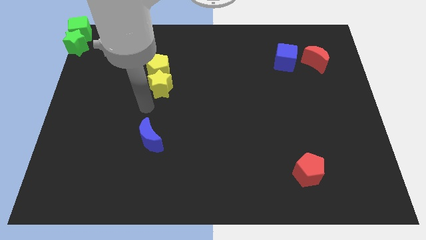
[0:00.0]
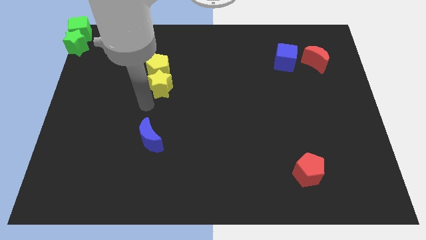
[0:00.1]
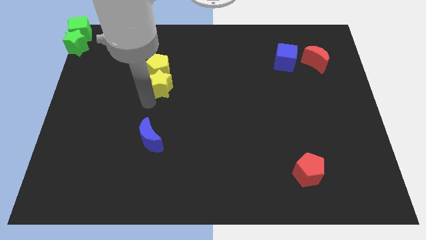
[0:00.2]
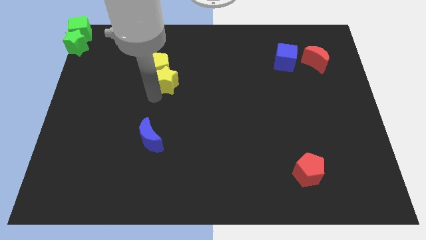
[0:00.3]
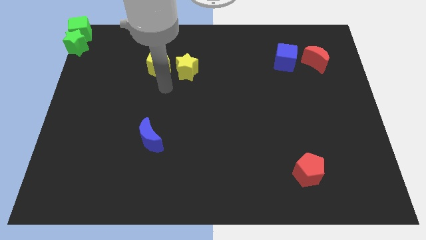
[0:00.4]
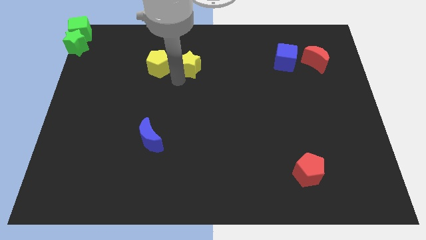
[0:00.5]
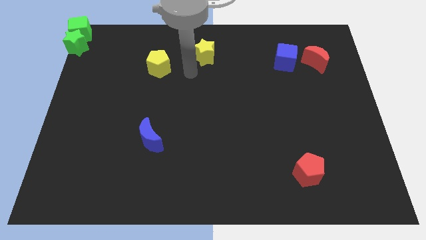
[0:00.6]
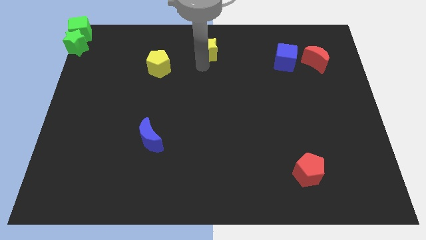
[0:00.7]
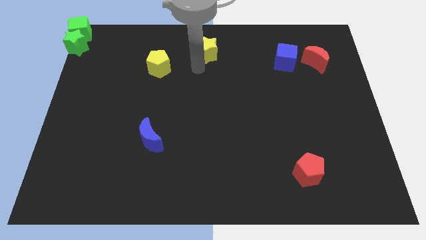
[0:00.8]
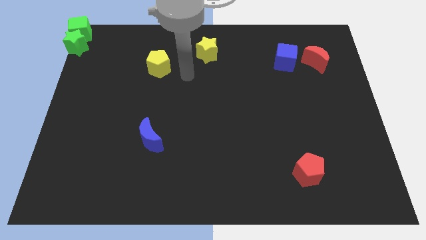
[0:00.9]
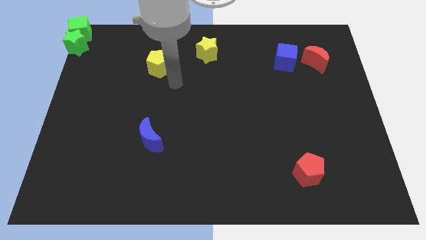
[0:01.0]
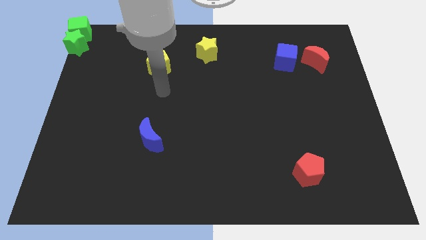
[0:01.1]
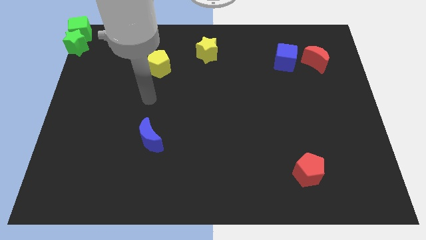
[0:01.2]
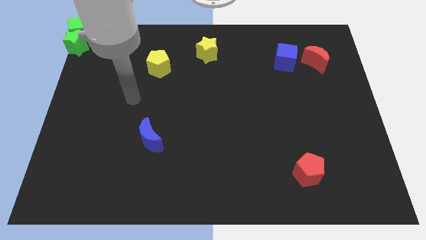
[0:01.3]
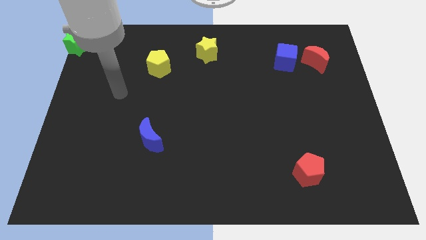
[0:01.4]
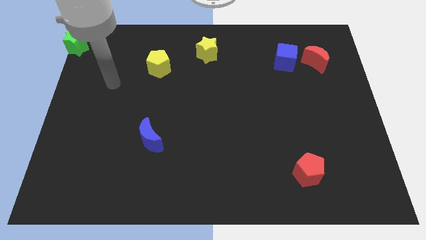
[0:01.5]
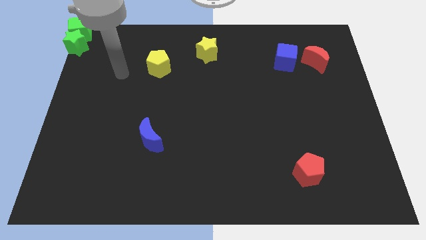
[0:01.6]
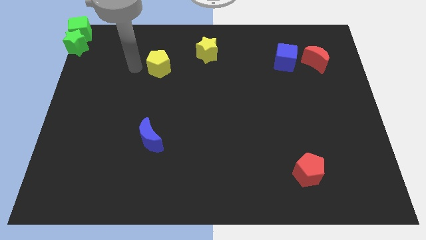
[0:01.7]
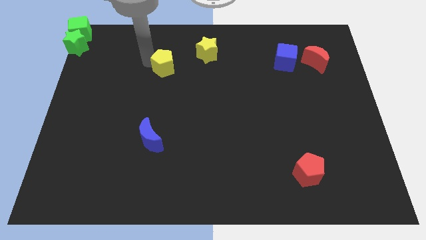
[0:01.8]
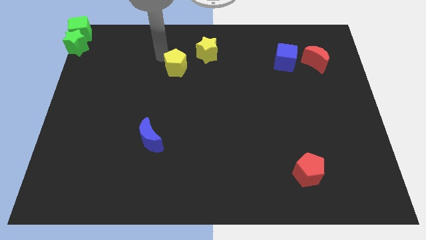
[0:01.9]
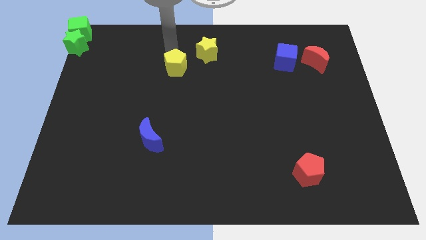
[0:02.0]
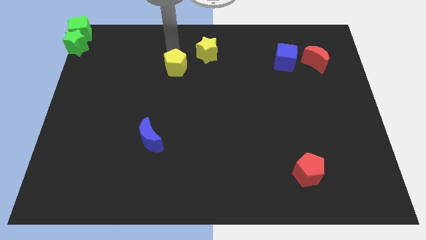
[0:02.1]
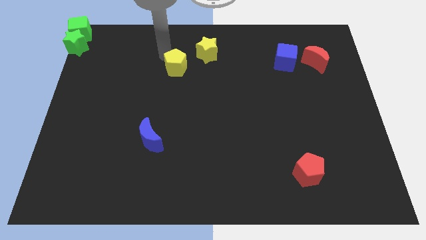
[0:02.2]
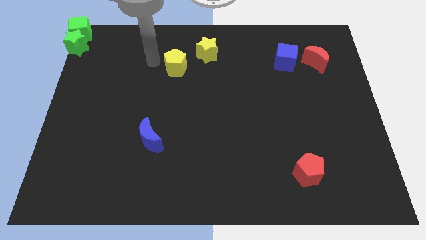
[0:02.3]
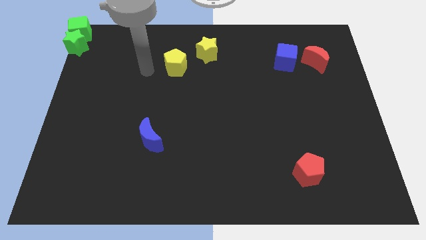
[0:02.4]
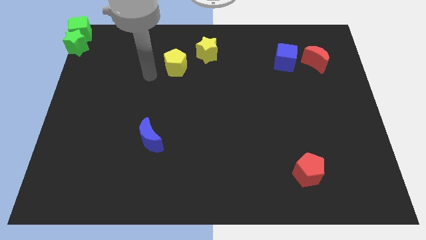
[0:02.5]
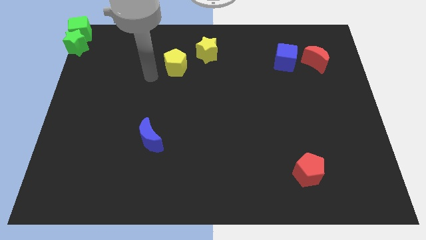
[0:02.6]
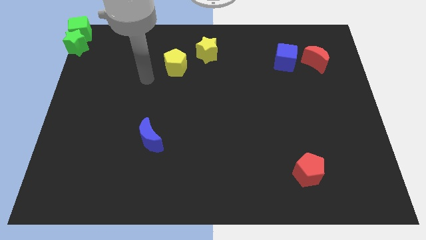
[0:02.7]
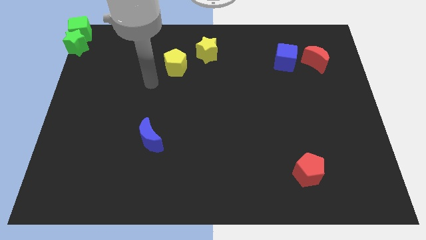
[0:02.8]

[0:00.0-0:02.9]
place the yellow star to the left of the blue cube

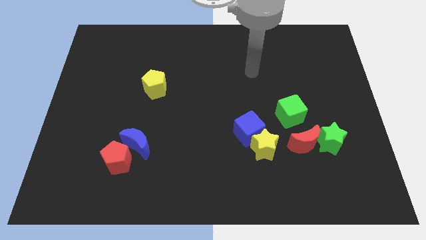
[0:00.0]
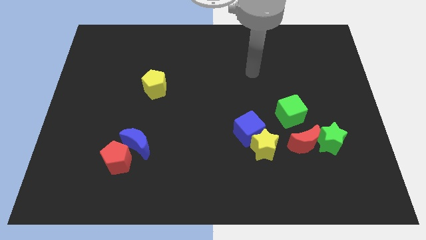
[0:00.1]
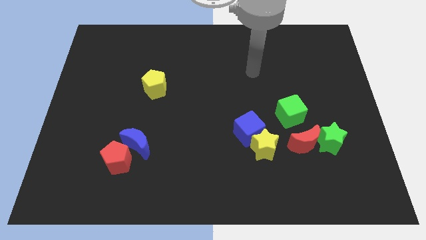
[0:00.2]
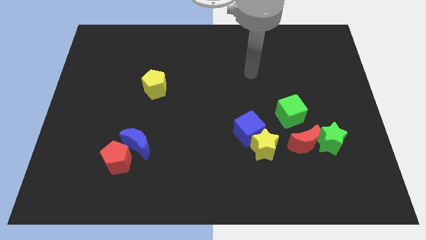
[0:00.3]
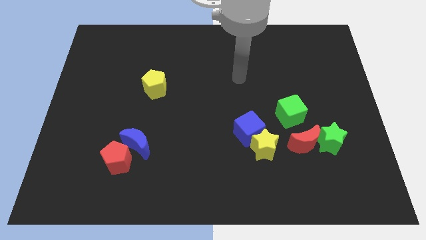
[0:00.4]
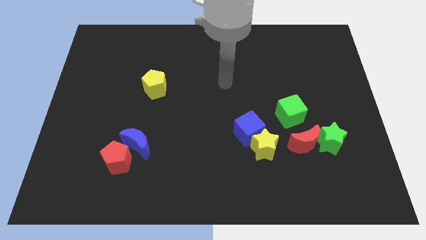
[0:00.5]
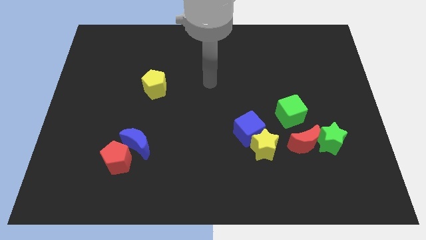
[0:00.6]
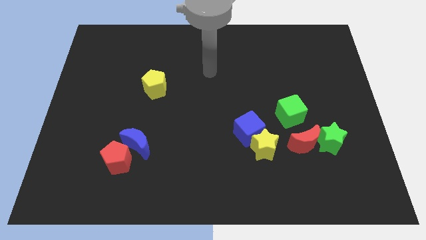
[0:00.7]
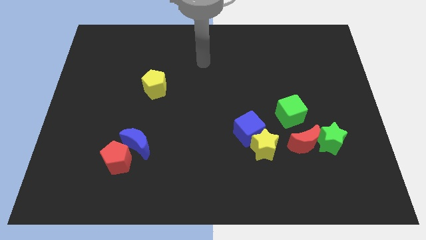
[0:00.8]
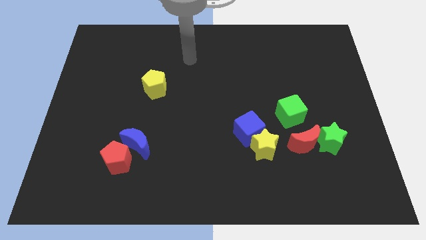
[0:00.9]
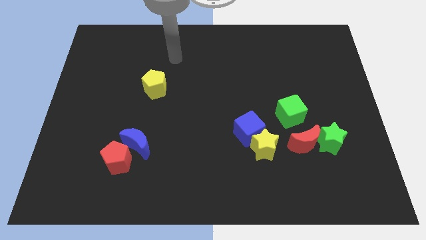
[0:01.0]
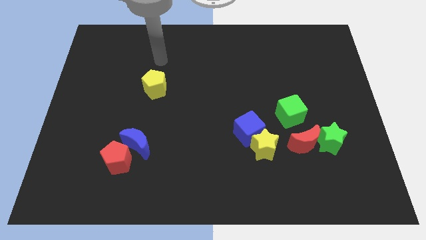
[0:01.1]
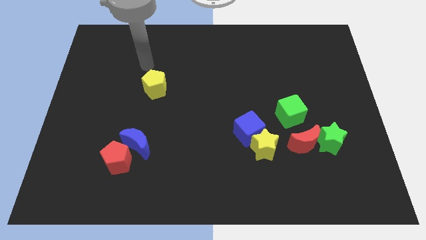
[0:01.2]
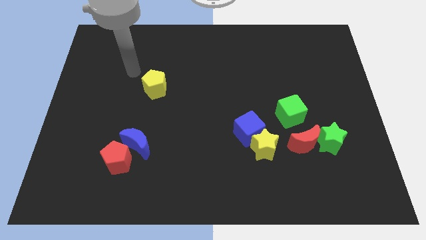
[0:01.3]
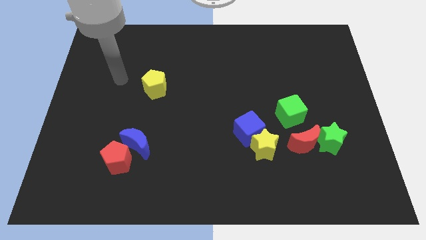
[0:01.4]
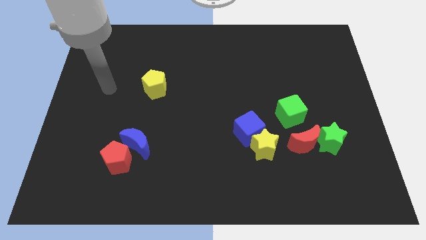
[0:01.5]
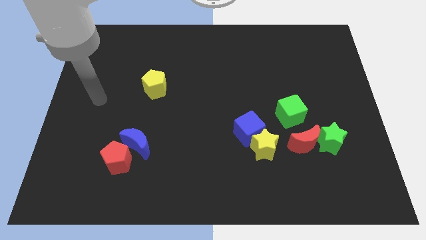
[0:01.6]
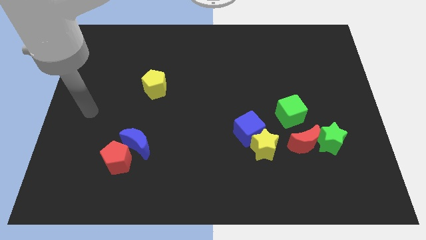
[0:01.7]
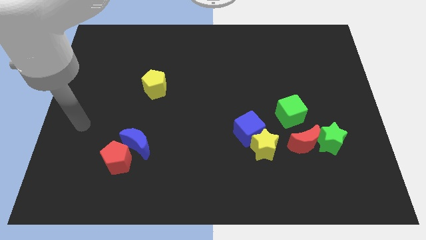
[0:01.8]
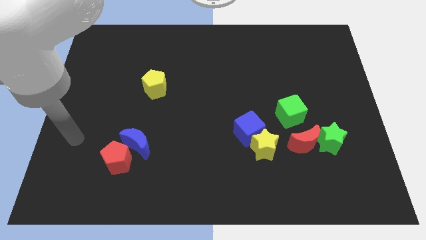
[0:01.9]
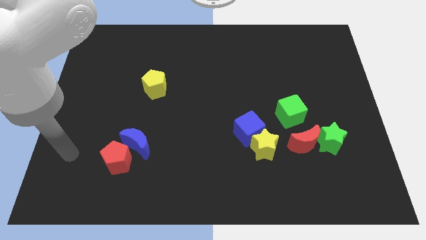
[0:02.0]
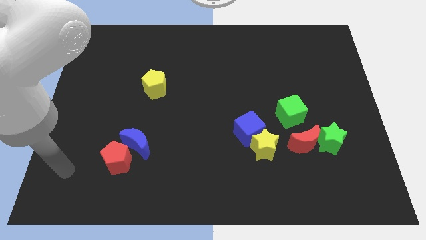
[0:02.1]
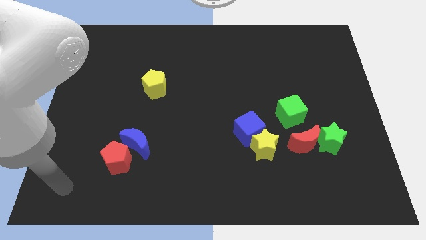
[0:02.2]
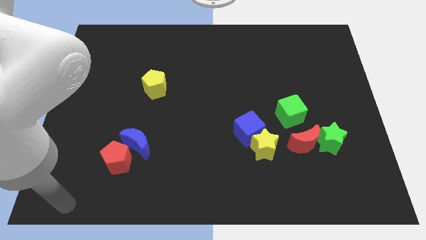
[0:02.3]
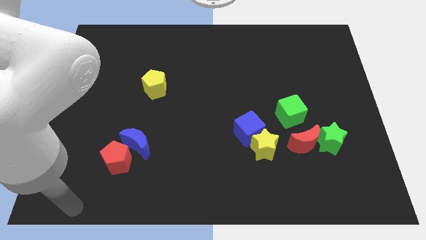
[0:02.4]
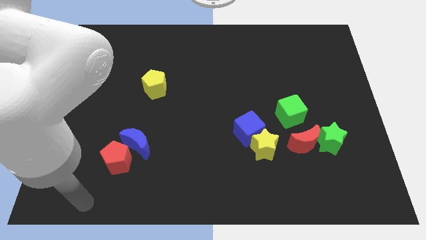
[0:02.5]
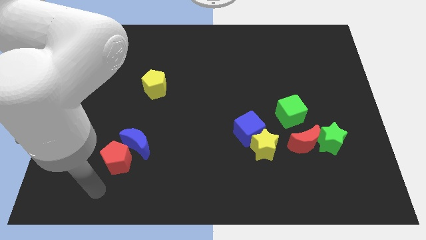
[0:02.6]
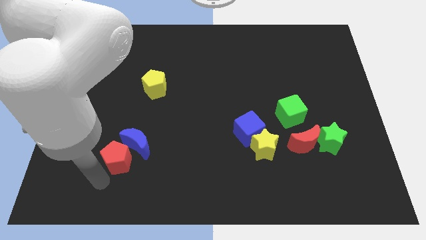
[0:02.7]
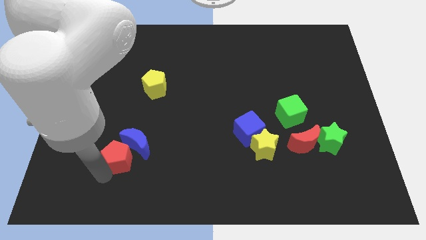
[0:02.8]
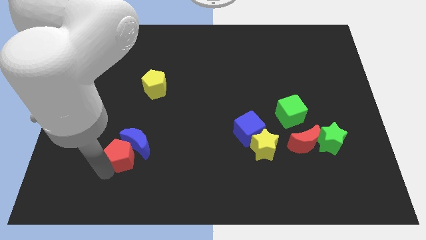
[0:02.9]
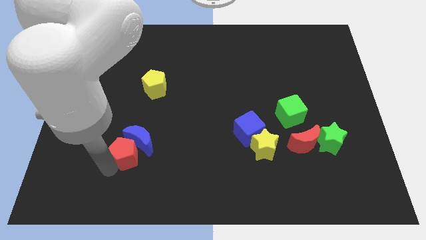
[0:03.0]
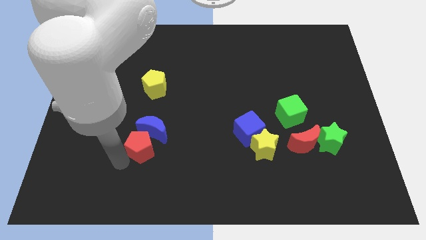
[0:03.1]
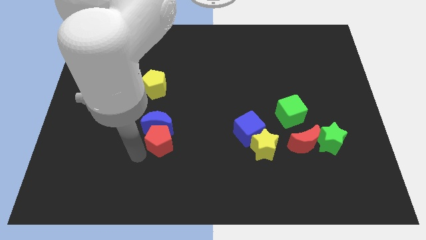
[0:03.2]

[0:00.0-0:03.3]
push the red pentagon into the blue moon

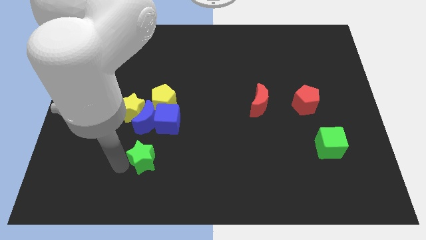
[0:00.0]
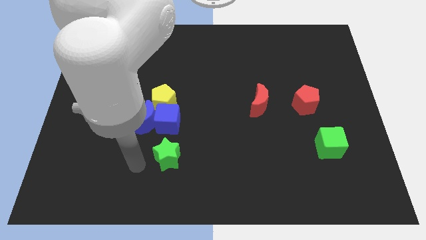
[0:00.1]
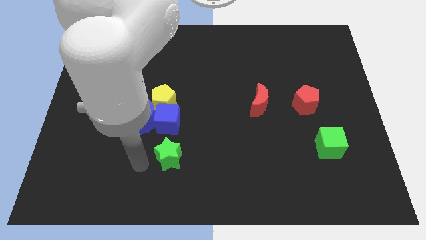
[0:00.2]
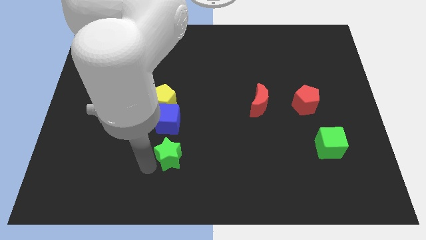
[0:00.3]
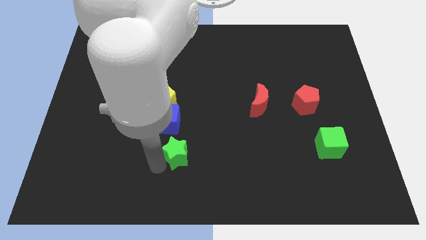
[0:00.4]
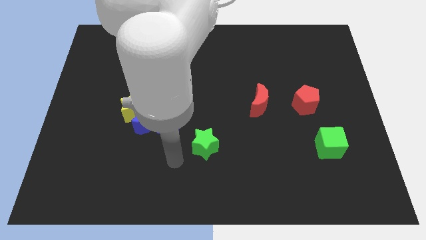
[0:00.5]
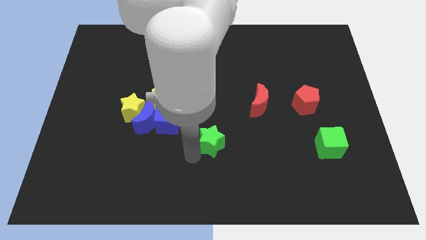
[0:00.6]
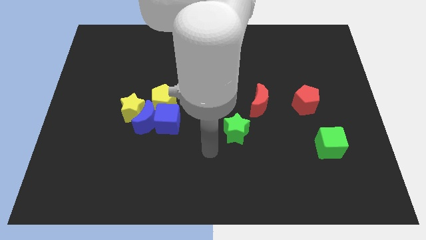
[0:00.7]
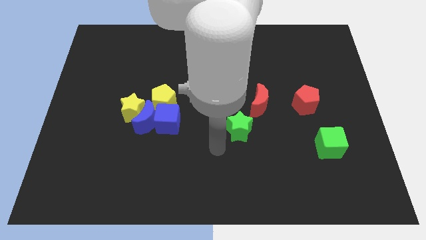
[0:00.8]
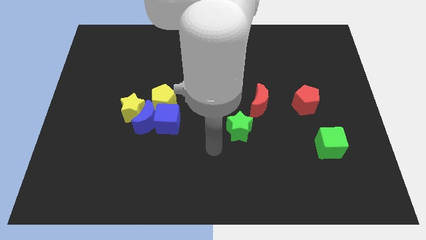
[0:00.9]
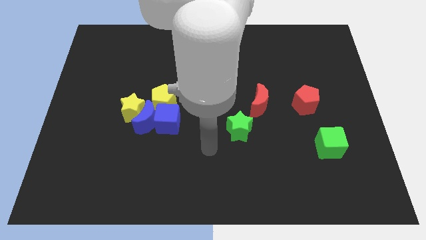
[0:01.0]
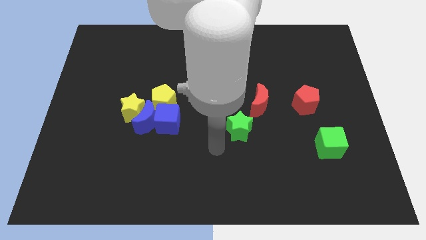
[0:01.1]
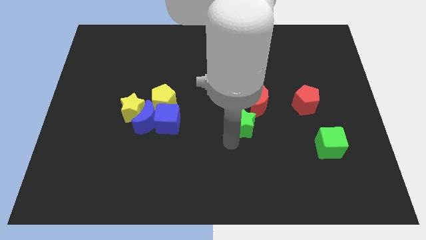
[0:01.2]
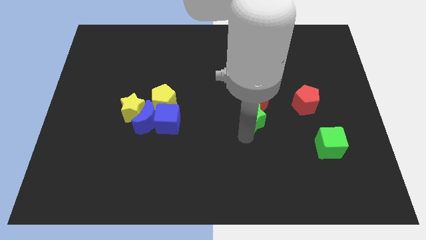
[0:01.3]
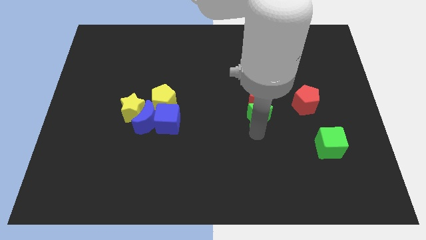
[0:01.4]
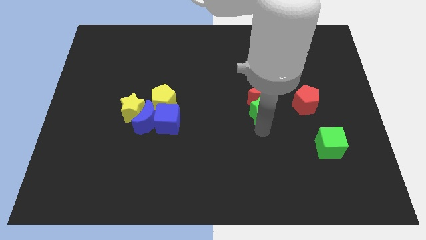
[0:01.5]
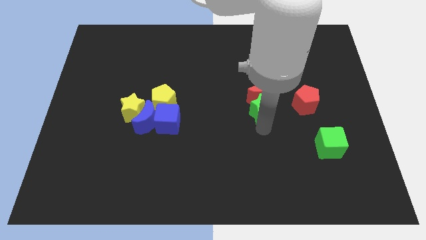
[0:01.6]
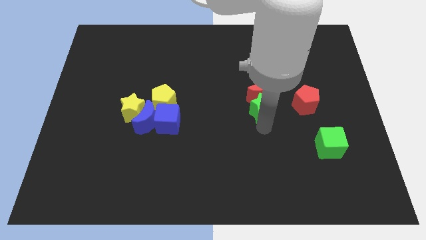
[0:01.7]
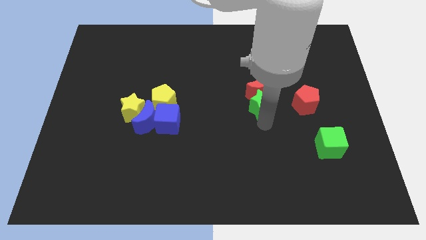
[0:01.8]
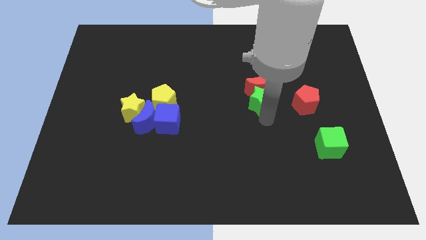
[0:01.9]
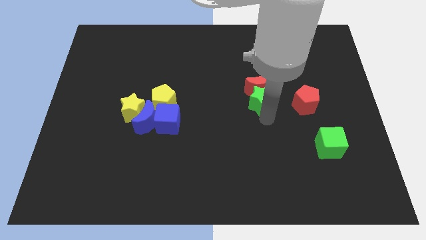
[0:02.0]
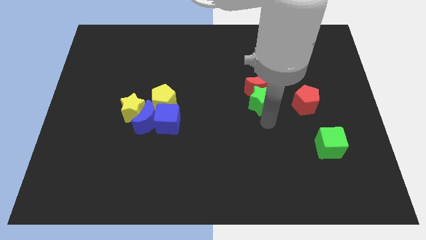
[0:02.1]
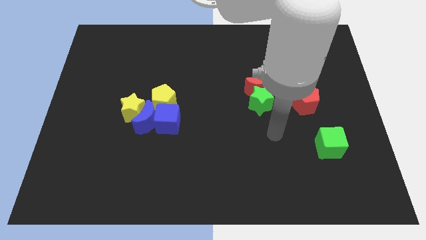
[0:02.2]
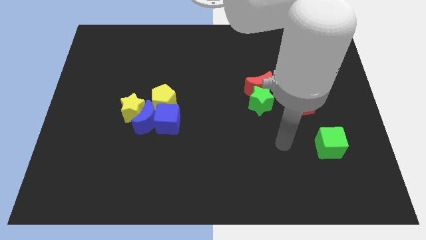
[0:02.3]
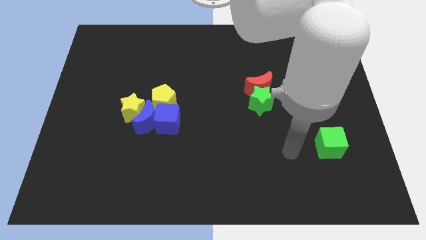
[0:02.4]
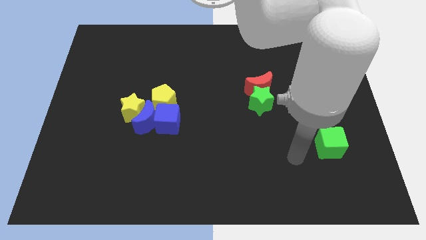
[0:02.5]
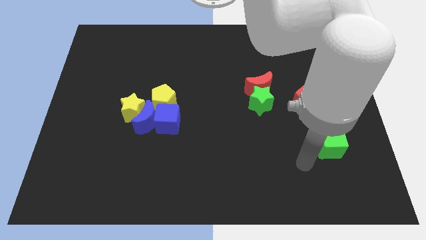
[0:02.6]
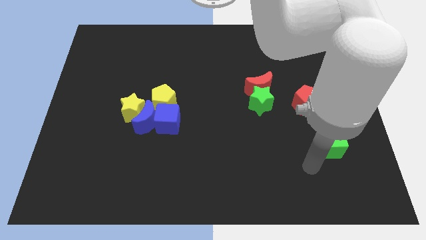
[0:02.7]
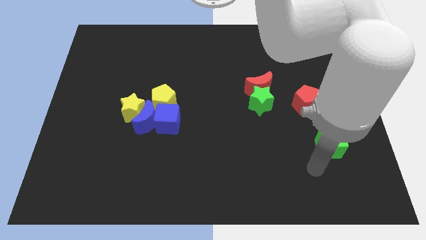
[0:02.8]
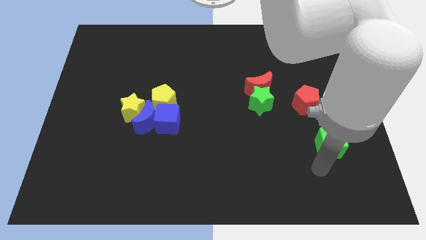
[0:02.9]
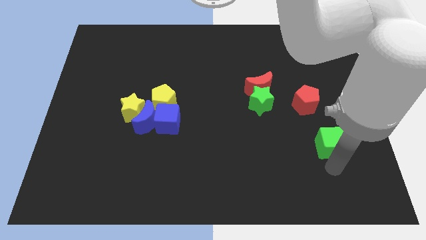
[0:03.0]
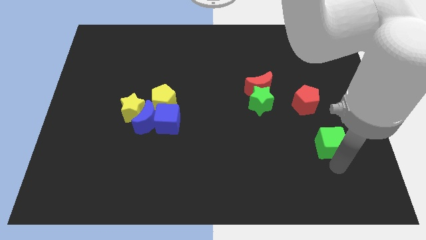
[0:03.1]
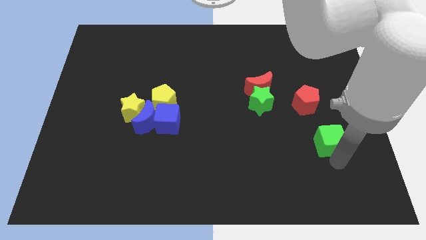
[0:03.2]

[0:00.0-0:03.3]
push the green star into the red moon
